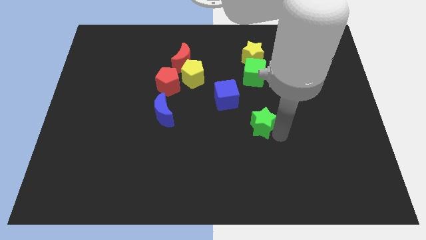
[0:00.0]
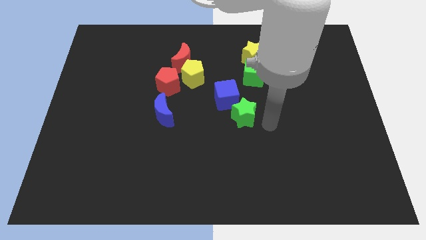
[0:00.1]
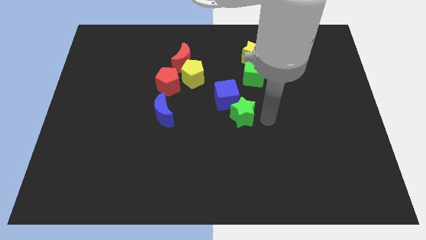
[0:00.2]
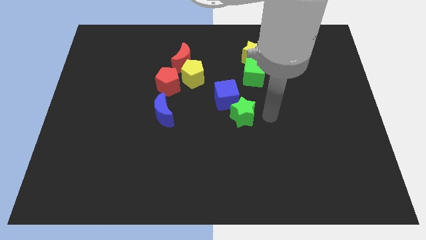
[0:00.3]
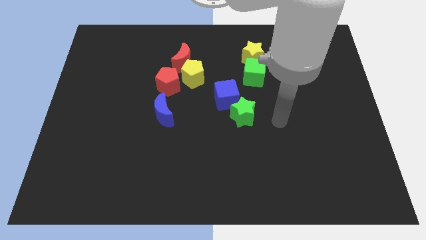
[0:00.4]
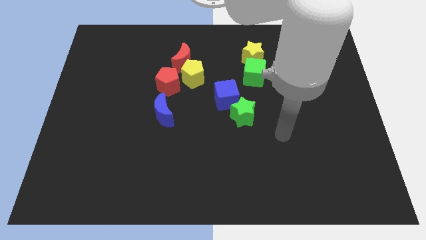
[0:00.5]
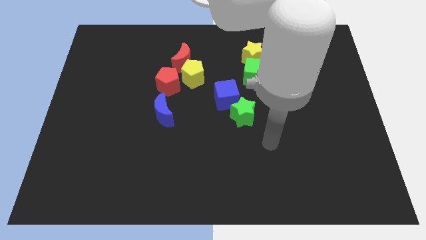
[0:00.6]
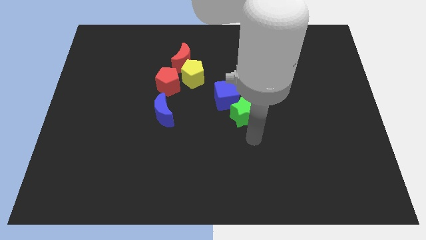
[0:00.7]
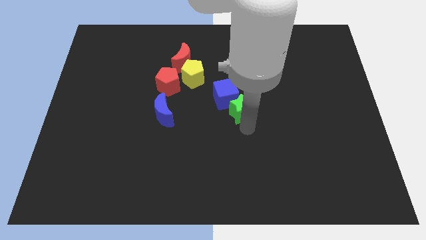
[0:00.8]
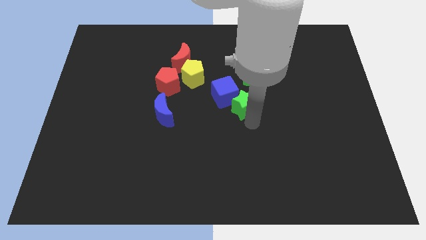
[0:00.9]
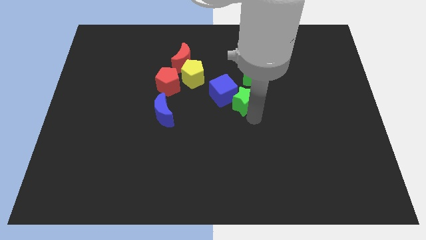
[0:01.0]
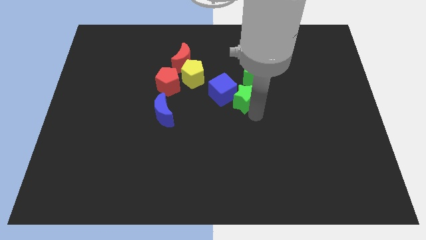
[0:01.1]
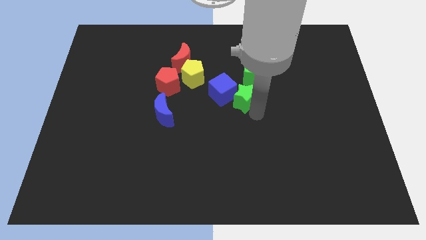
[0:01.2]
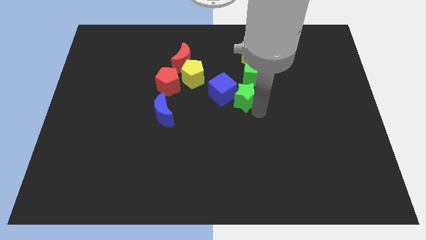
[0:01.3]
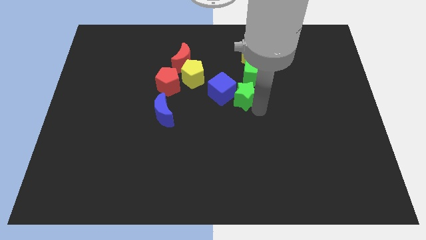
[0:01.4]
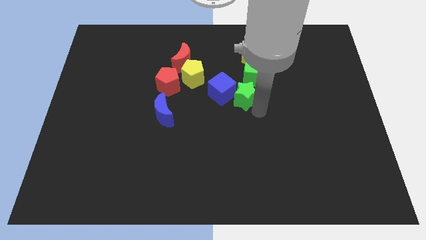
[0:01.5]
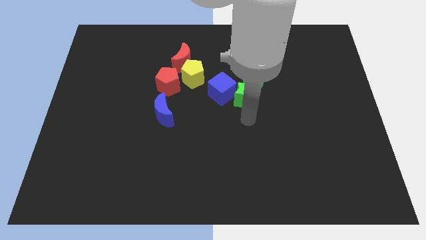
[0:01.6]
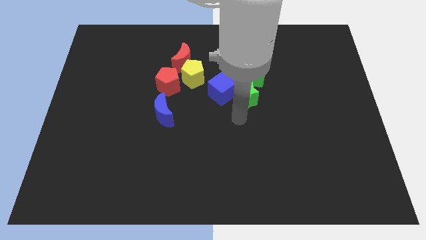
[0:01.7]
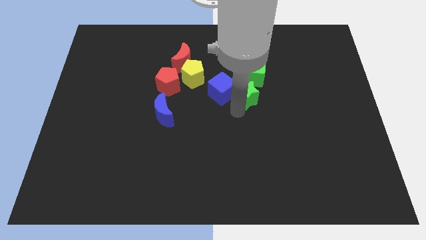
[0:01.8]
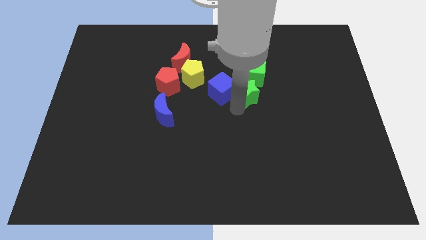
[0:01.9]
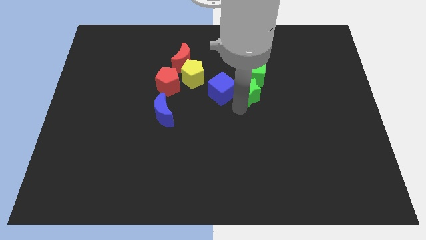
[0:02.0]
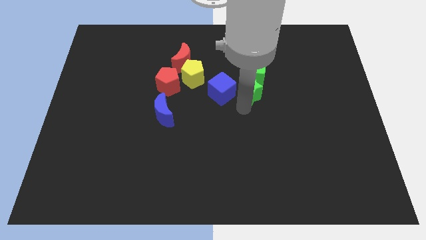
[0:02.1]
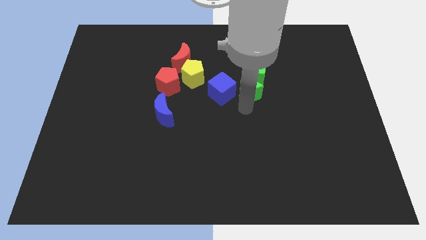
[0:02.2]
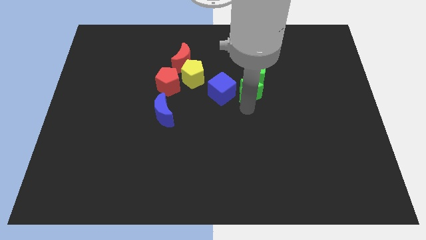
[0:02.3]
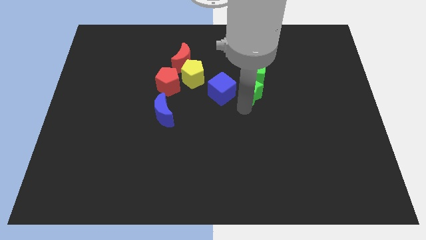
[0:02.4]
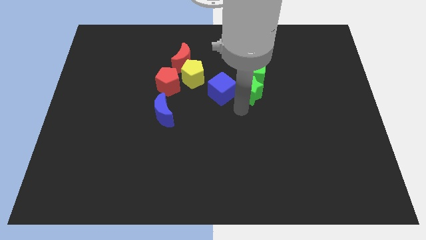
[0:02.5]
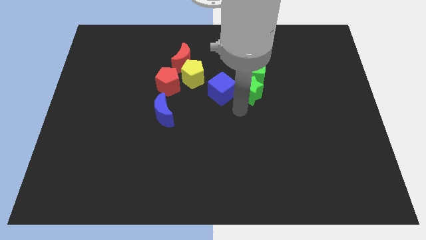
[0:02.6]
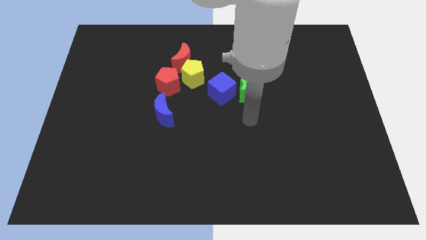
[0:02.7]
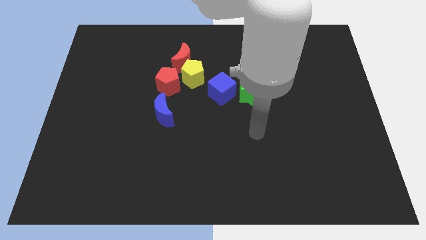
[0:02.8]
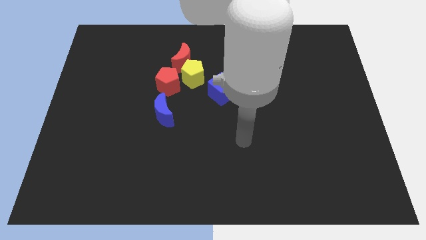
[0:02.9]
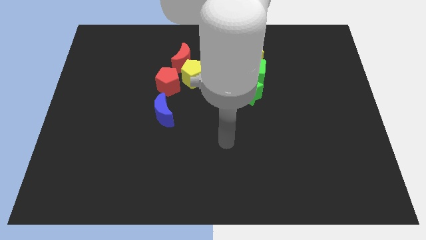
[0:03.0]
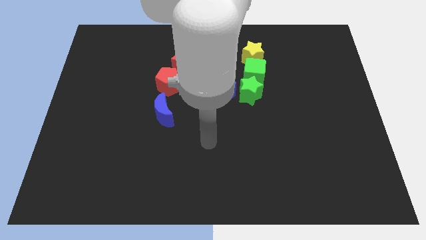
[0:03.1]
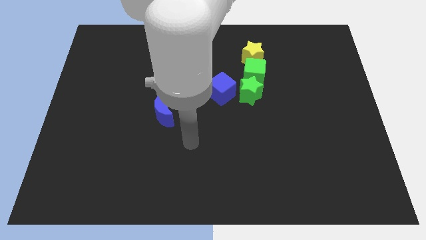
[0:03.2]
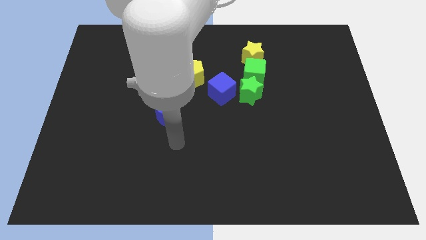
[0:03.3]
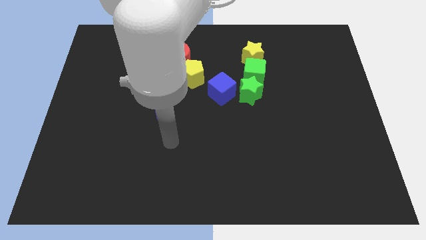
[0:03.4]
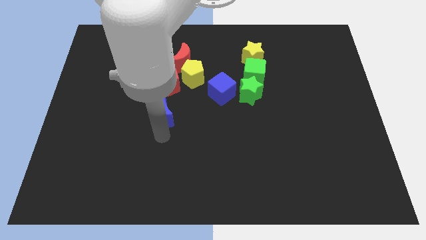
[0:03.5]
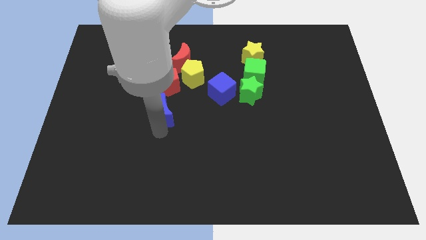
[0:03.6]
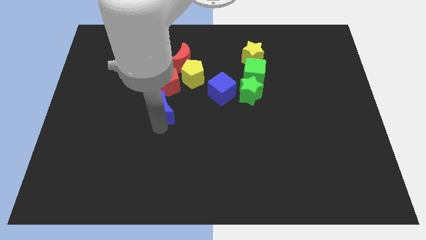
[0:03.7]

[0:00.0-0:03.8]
place the green star at the bottom of the green cube

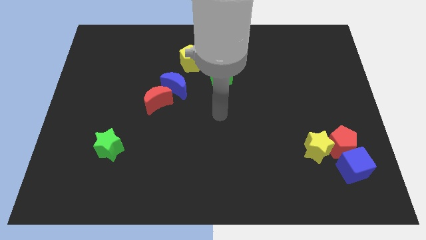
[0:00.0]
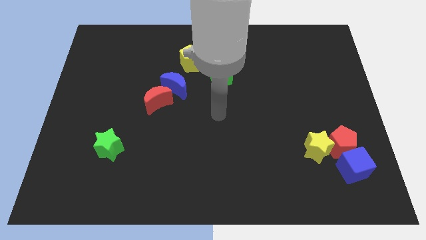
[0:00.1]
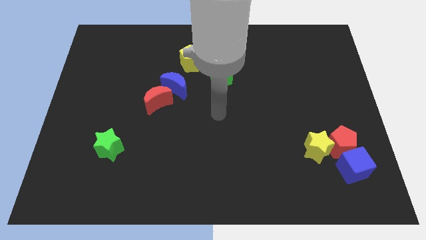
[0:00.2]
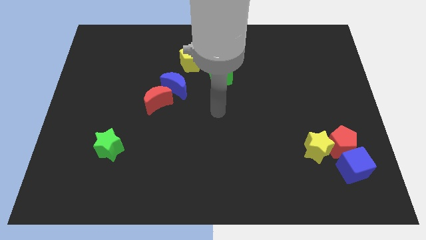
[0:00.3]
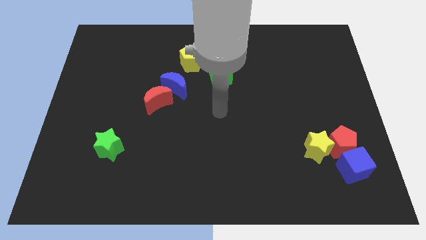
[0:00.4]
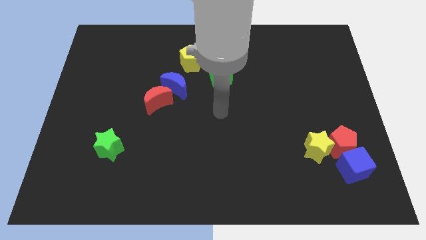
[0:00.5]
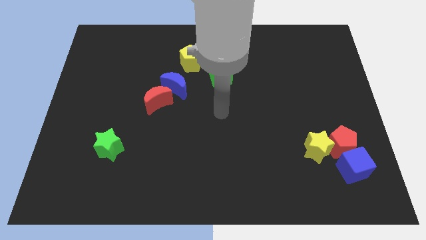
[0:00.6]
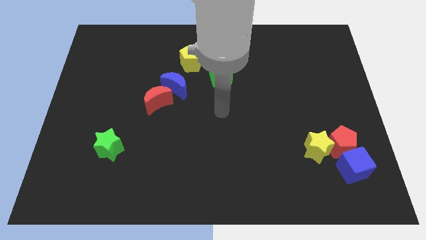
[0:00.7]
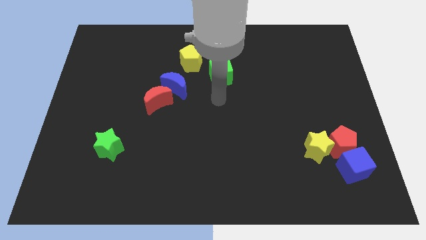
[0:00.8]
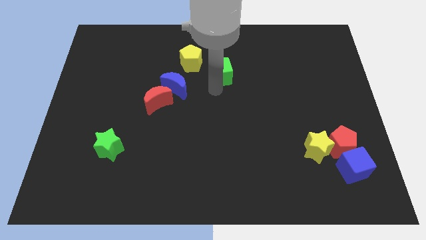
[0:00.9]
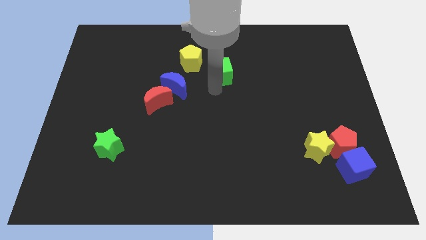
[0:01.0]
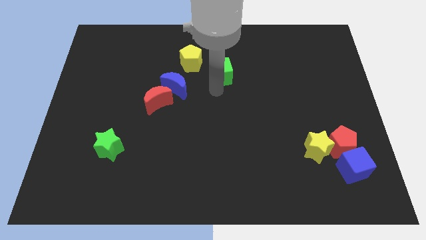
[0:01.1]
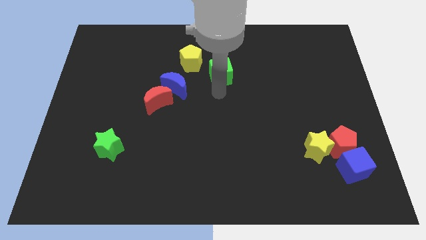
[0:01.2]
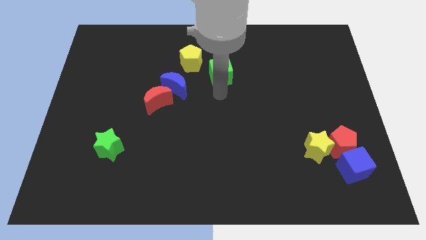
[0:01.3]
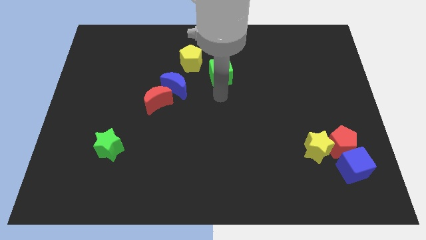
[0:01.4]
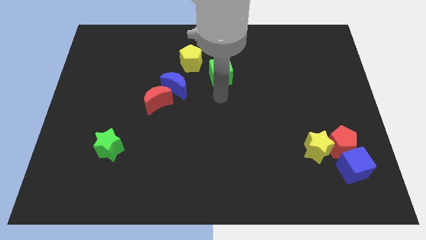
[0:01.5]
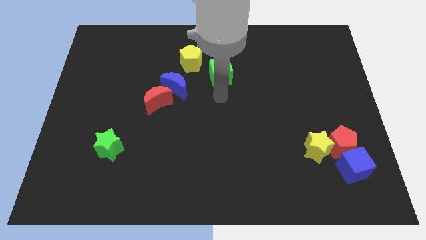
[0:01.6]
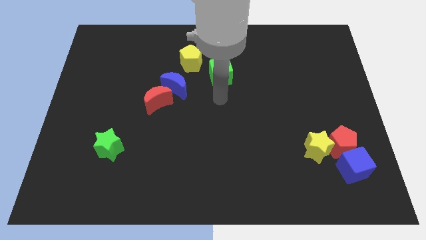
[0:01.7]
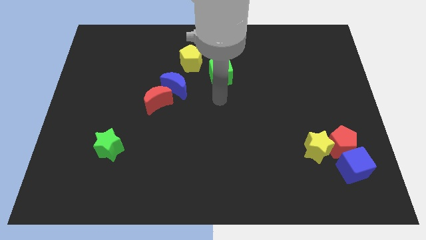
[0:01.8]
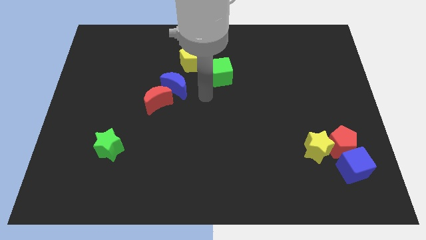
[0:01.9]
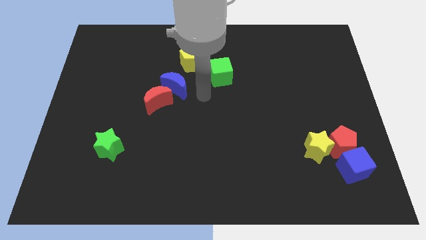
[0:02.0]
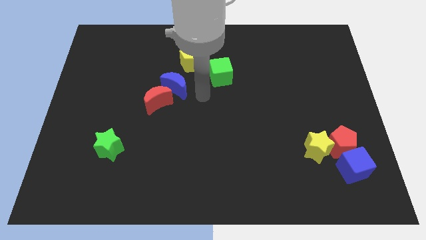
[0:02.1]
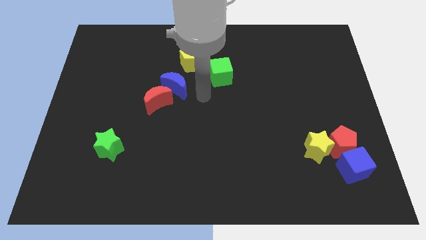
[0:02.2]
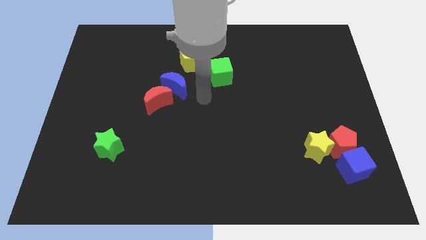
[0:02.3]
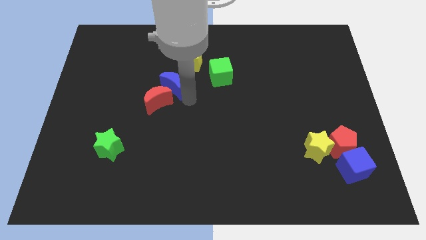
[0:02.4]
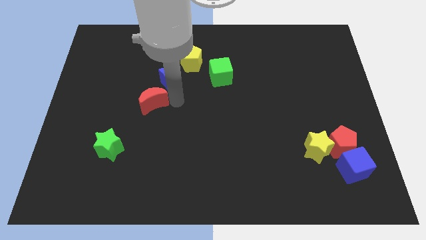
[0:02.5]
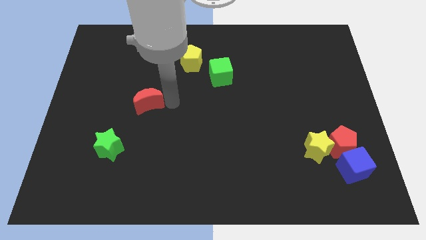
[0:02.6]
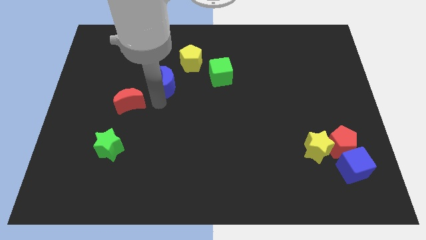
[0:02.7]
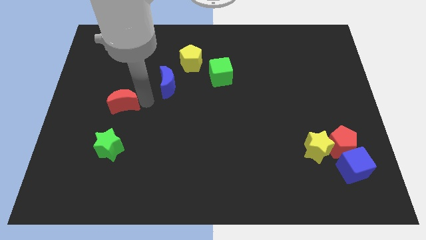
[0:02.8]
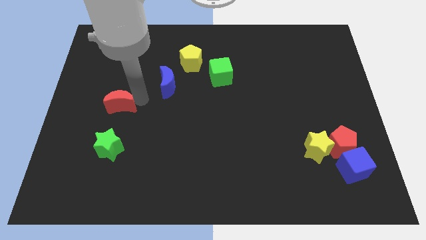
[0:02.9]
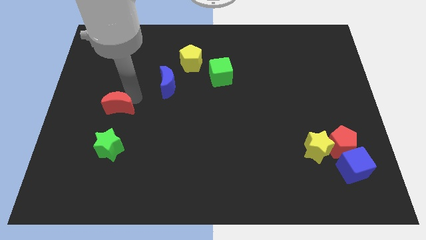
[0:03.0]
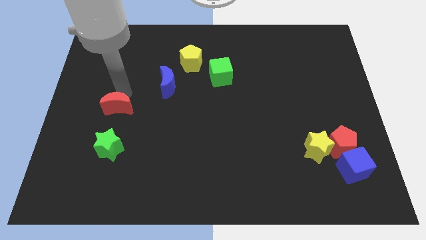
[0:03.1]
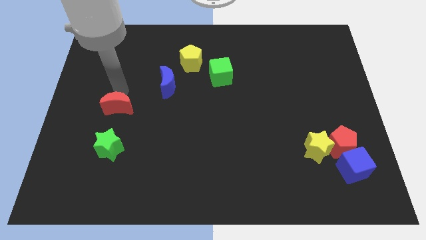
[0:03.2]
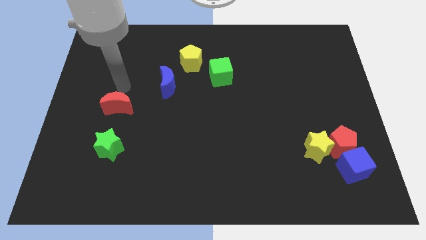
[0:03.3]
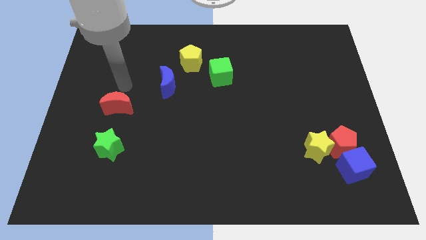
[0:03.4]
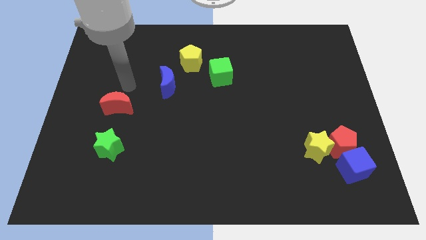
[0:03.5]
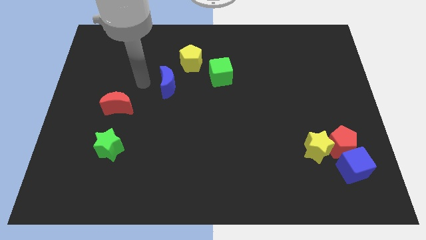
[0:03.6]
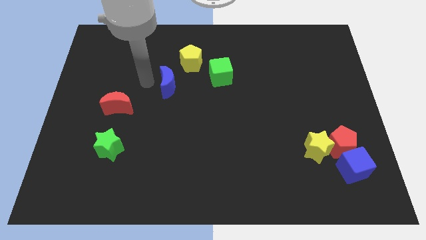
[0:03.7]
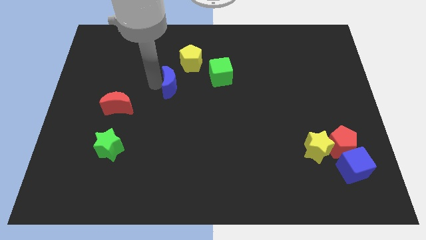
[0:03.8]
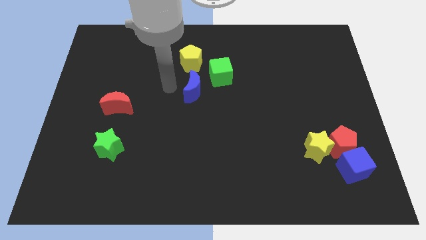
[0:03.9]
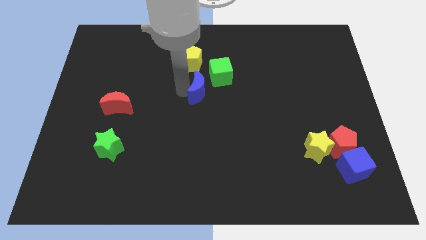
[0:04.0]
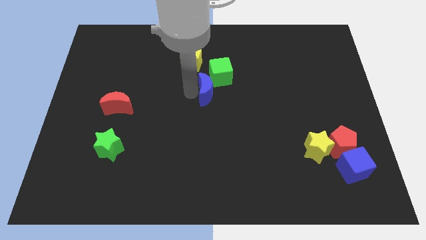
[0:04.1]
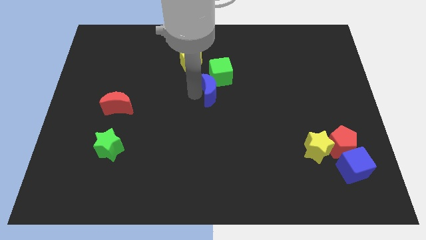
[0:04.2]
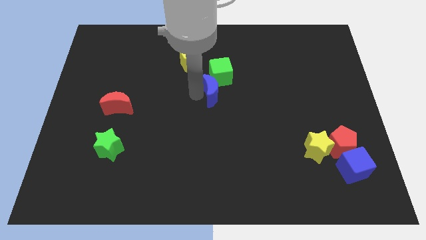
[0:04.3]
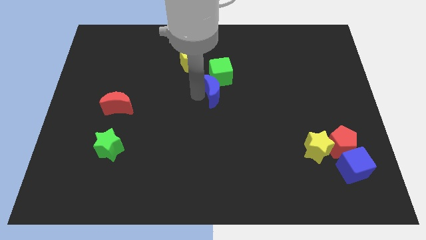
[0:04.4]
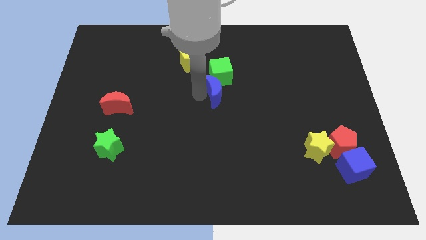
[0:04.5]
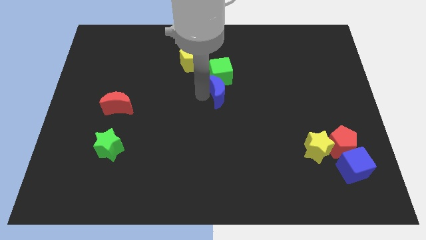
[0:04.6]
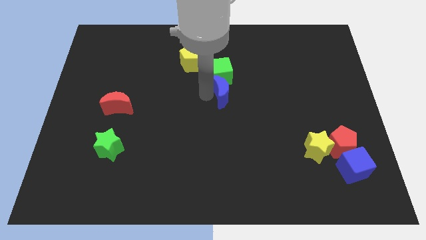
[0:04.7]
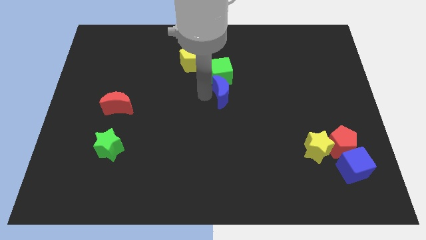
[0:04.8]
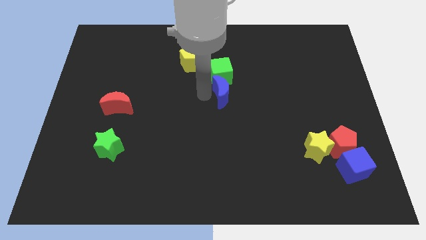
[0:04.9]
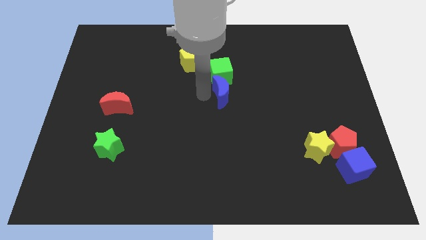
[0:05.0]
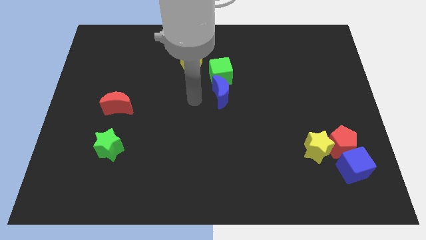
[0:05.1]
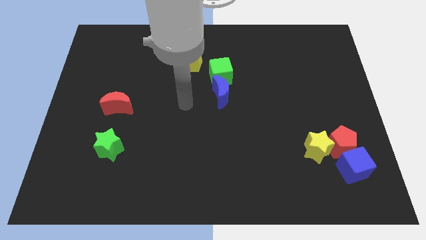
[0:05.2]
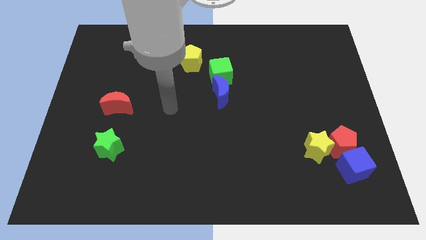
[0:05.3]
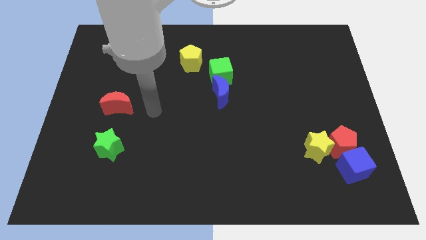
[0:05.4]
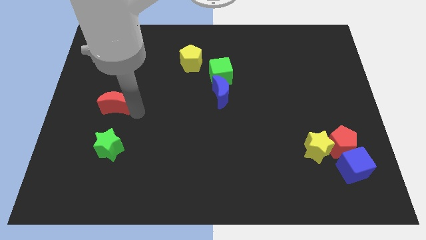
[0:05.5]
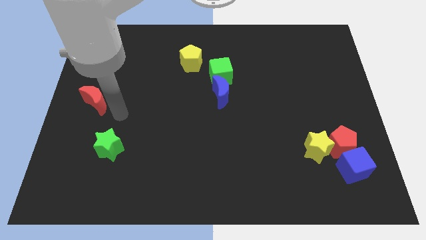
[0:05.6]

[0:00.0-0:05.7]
push red crescent and blue crescent apart from each other
